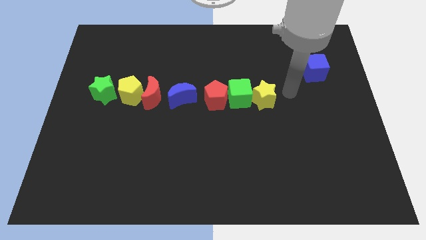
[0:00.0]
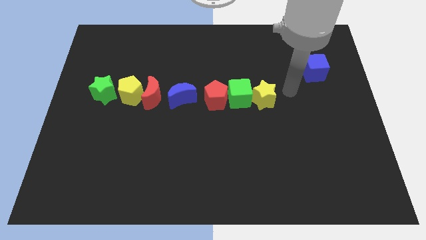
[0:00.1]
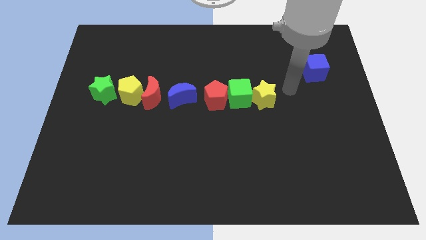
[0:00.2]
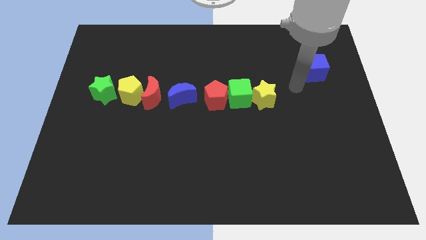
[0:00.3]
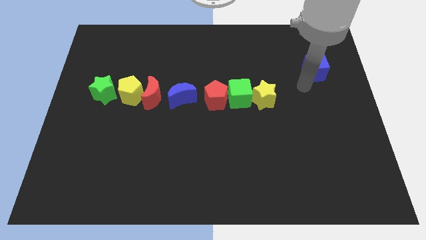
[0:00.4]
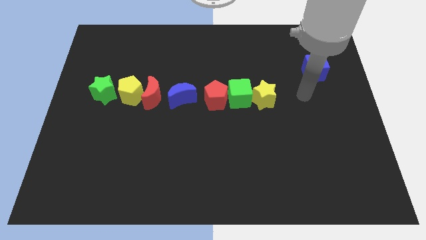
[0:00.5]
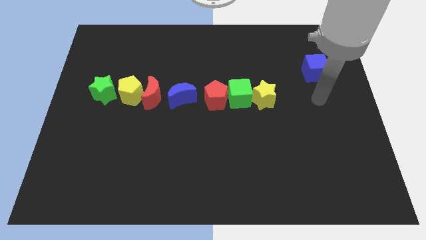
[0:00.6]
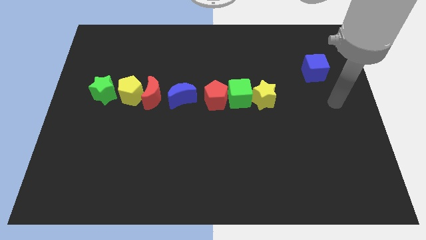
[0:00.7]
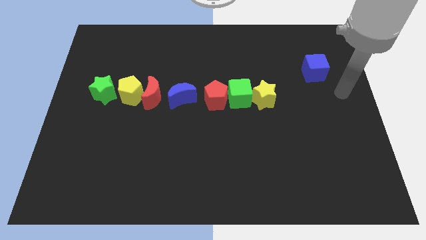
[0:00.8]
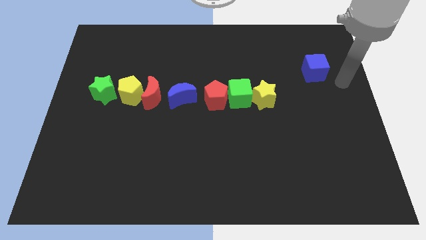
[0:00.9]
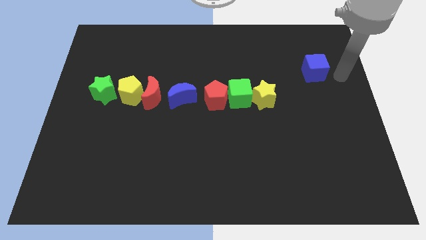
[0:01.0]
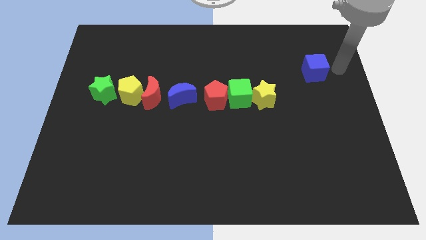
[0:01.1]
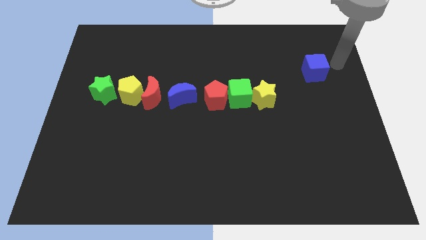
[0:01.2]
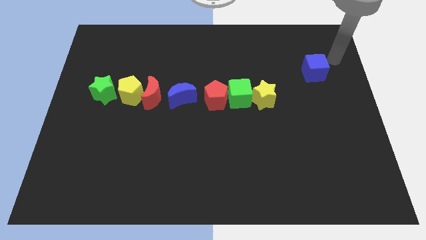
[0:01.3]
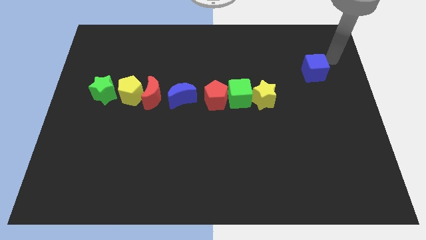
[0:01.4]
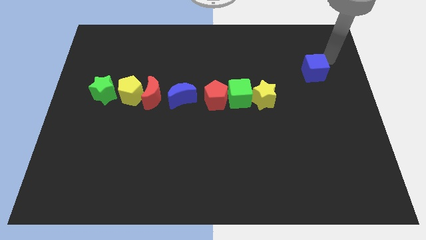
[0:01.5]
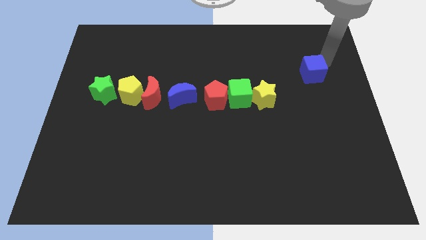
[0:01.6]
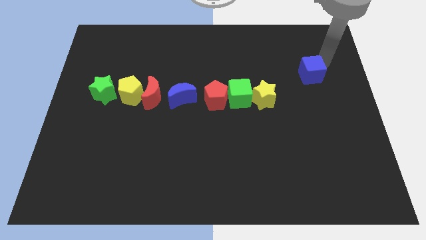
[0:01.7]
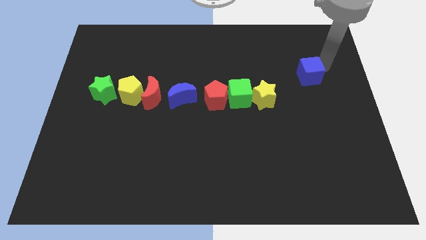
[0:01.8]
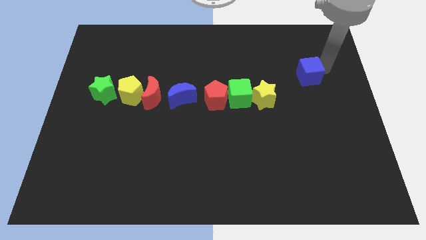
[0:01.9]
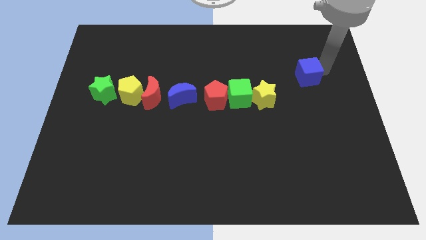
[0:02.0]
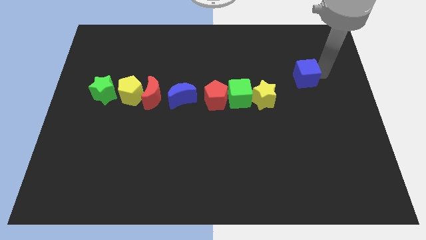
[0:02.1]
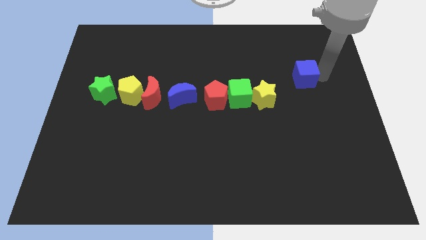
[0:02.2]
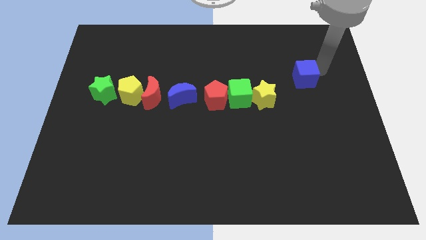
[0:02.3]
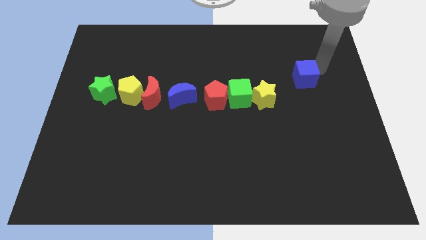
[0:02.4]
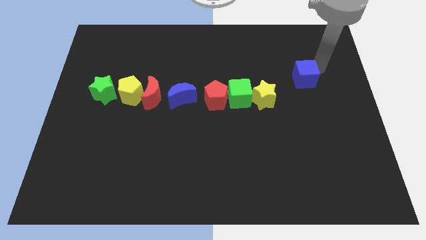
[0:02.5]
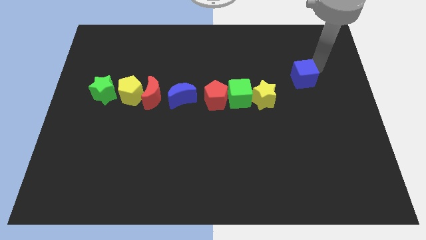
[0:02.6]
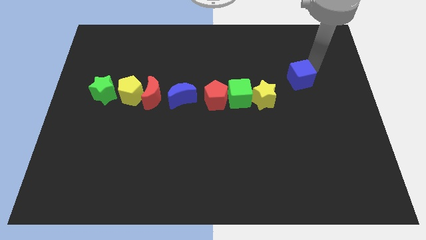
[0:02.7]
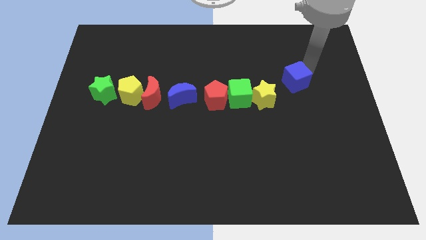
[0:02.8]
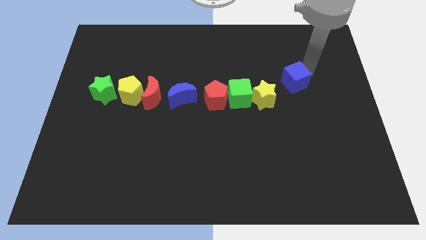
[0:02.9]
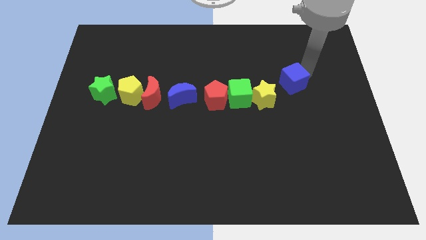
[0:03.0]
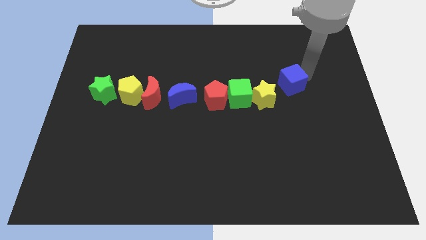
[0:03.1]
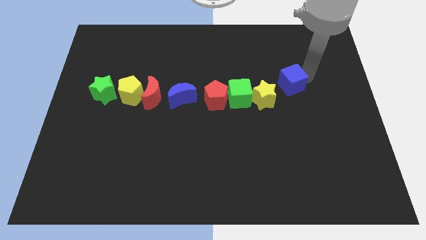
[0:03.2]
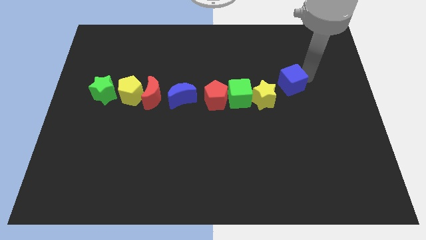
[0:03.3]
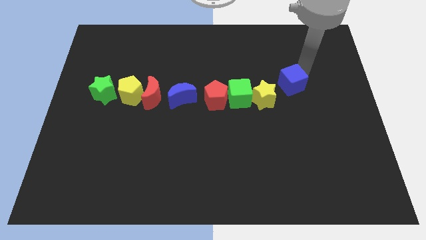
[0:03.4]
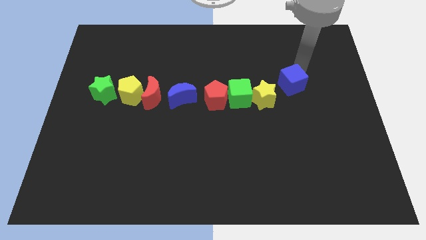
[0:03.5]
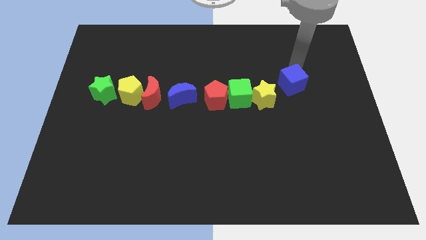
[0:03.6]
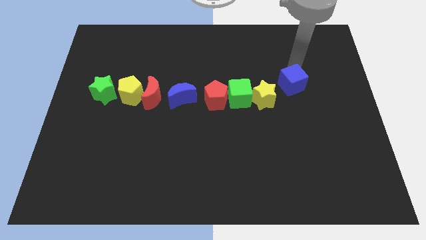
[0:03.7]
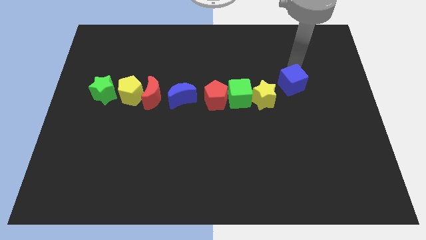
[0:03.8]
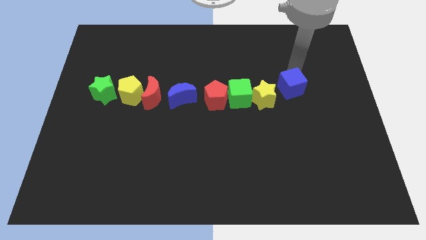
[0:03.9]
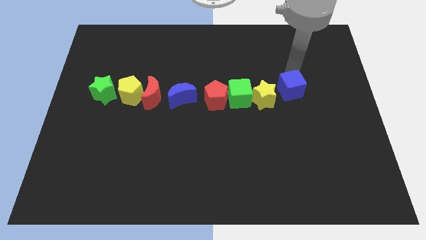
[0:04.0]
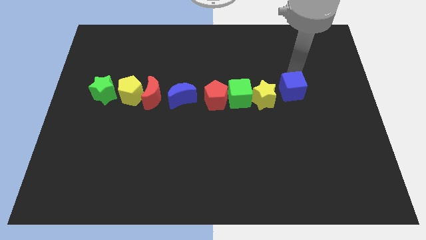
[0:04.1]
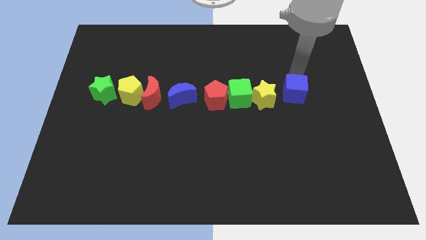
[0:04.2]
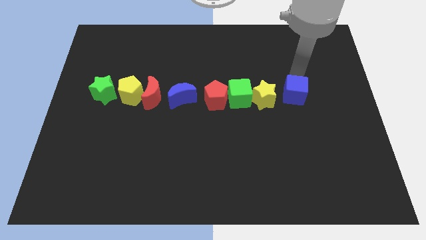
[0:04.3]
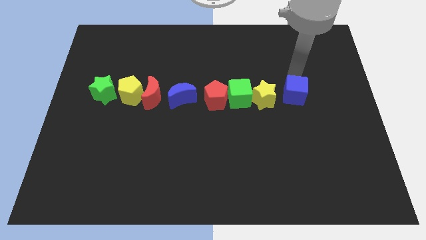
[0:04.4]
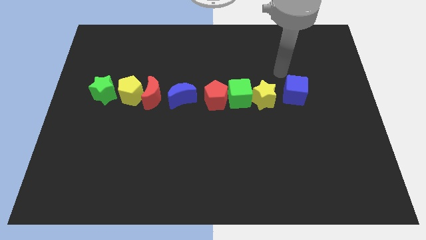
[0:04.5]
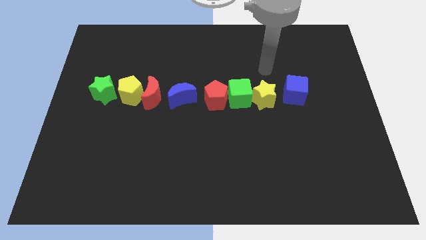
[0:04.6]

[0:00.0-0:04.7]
push the blue cube to the right of the yellow star

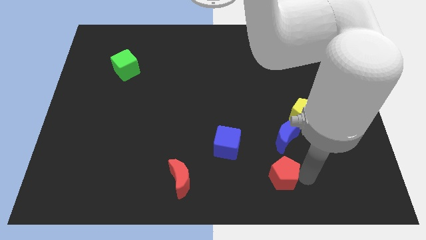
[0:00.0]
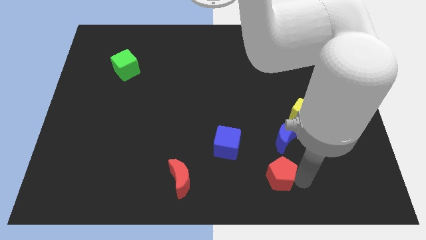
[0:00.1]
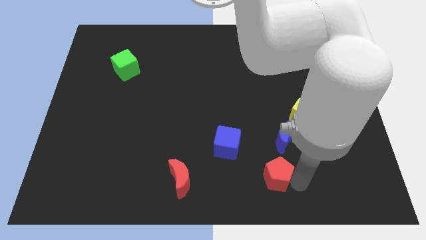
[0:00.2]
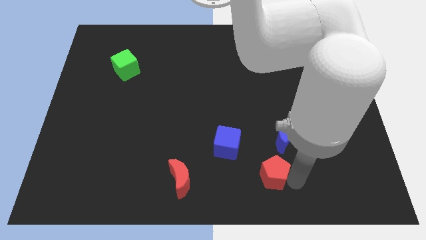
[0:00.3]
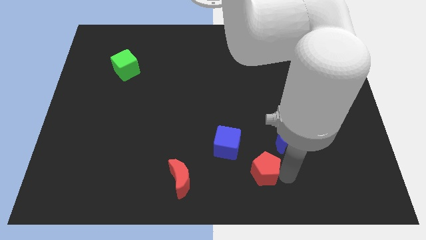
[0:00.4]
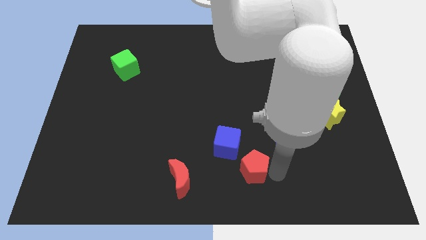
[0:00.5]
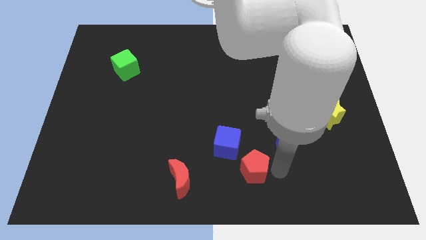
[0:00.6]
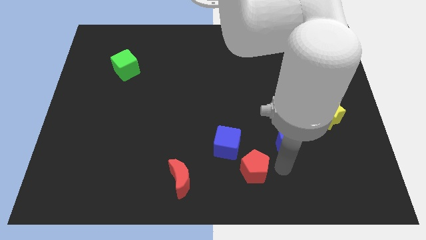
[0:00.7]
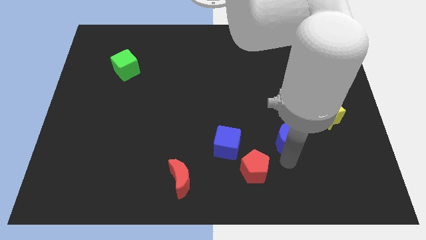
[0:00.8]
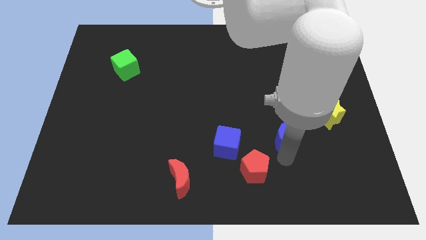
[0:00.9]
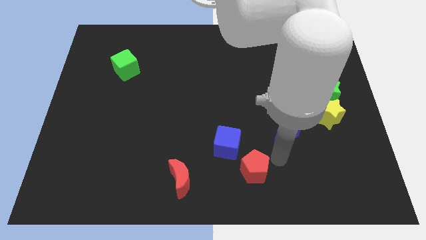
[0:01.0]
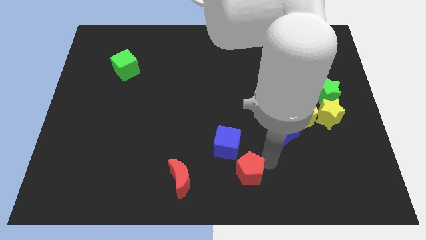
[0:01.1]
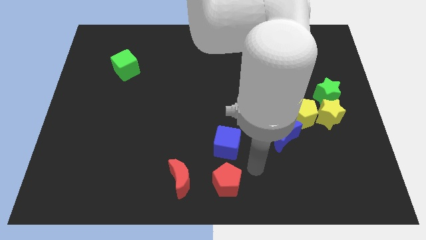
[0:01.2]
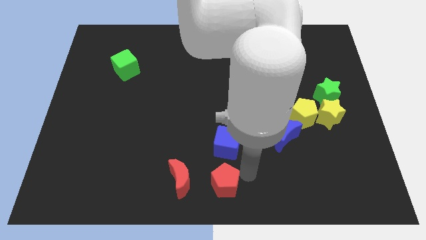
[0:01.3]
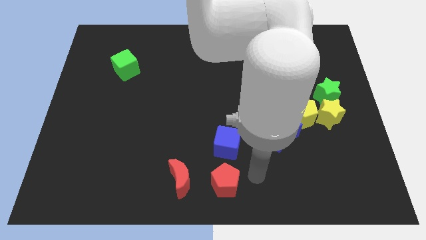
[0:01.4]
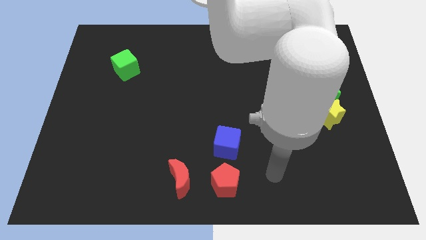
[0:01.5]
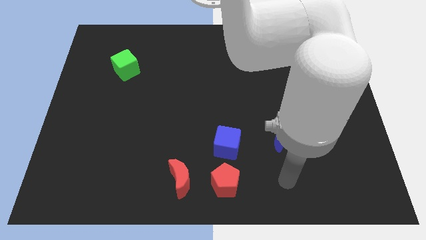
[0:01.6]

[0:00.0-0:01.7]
move the red pentagon vertically below the blue cube

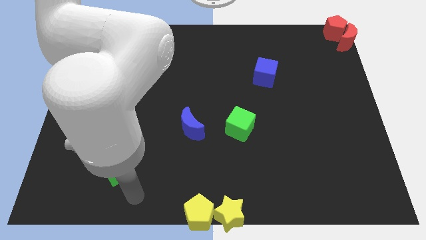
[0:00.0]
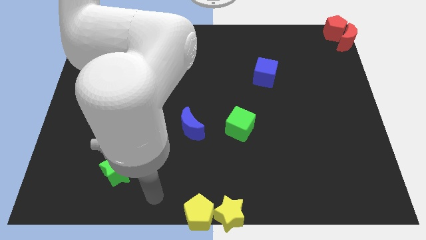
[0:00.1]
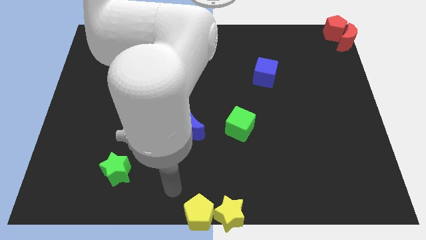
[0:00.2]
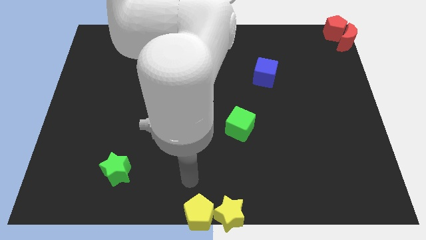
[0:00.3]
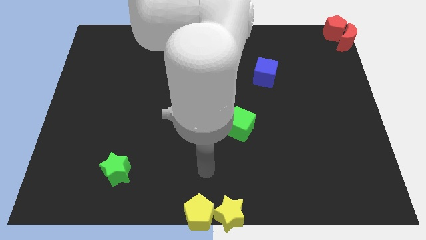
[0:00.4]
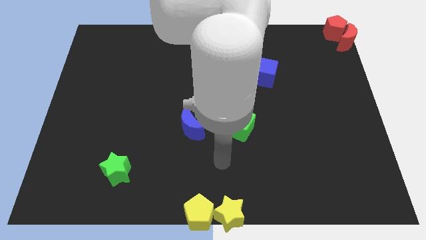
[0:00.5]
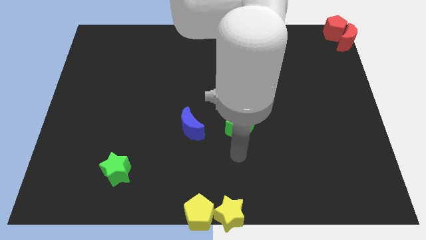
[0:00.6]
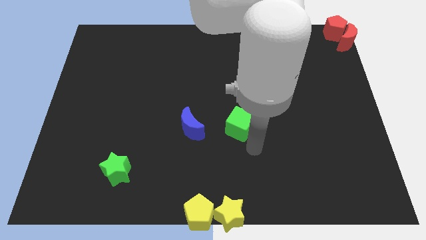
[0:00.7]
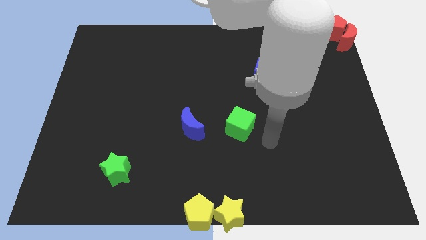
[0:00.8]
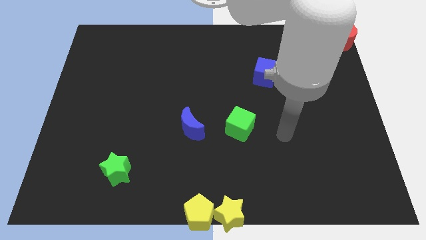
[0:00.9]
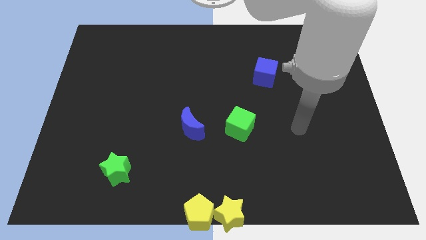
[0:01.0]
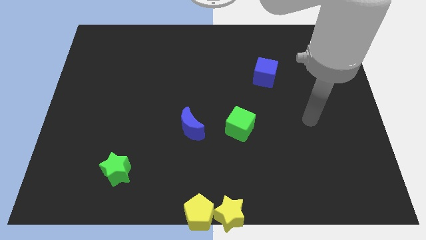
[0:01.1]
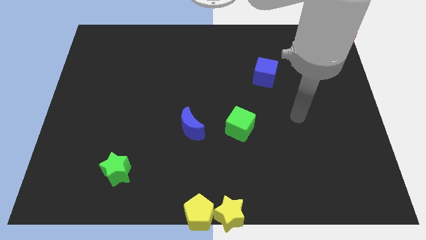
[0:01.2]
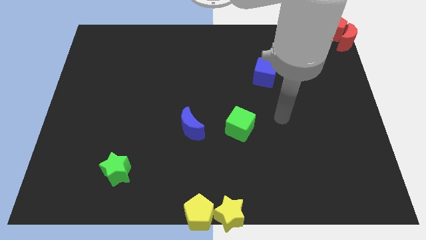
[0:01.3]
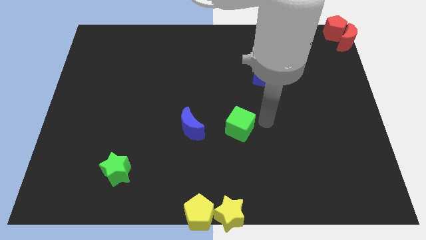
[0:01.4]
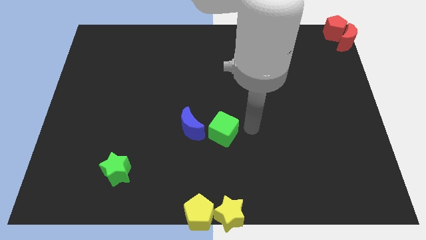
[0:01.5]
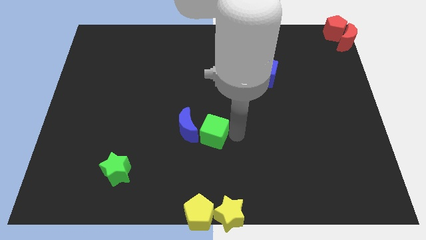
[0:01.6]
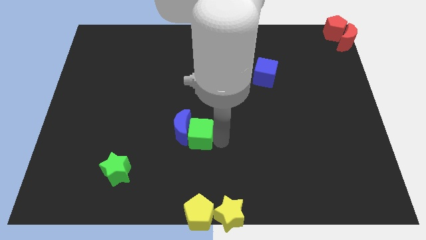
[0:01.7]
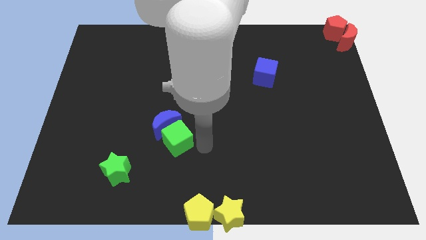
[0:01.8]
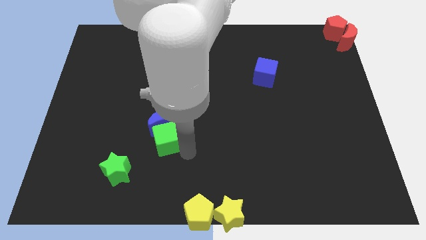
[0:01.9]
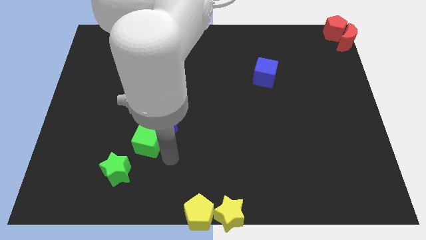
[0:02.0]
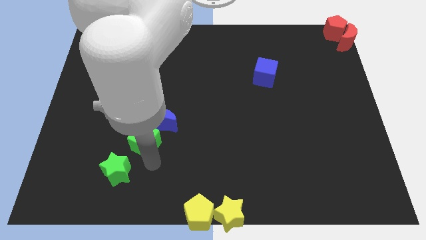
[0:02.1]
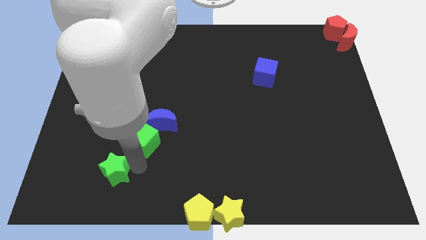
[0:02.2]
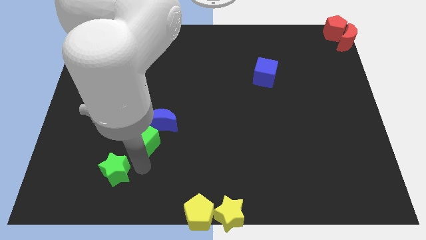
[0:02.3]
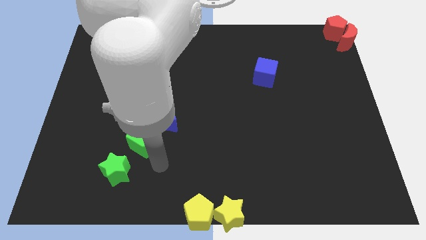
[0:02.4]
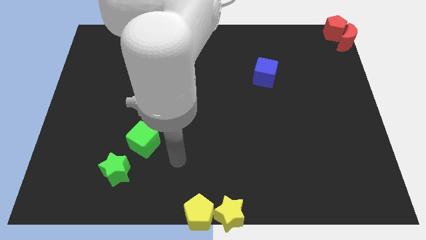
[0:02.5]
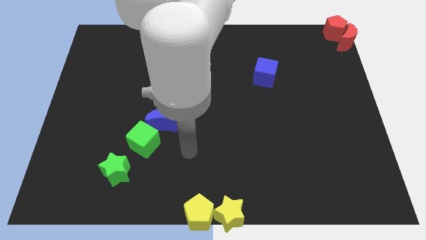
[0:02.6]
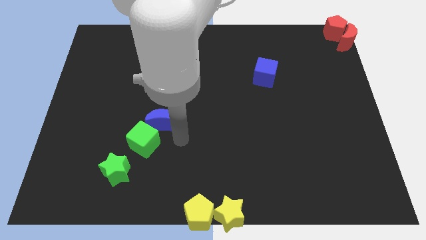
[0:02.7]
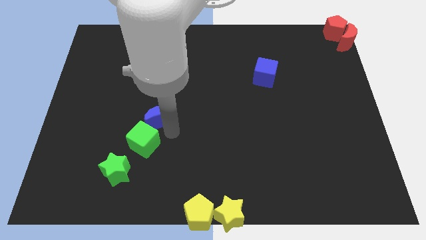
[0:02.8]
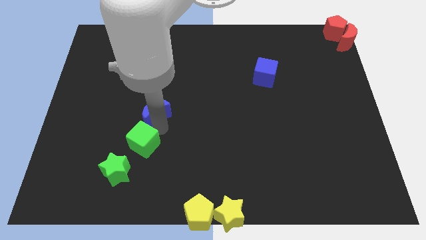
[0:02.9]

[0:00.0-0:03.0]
push the green cube into the blue moon
